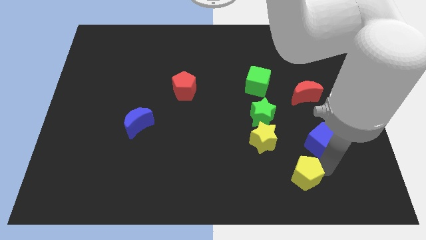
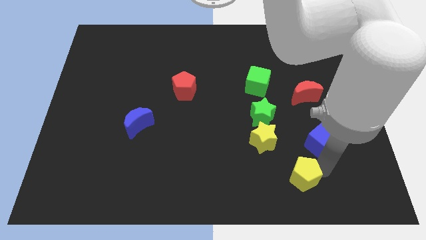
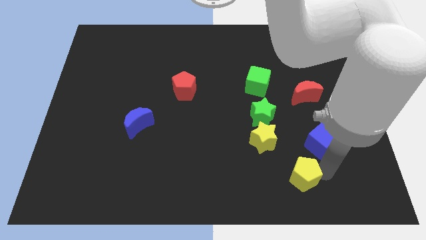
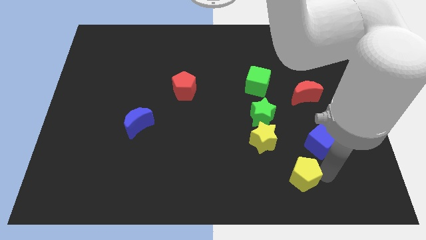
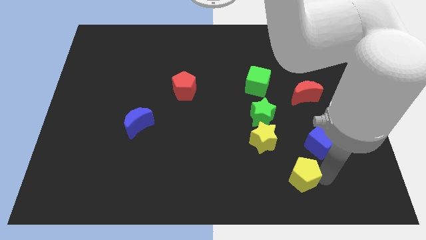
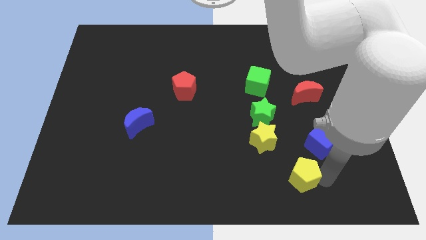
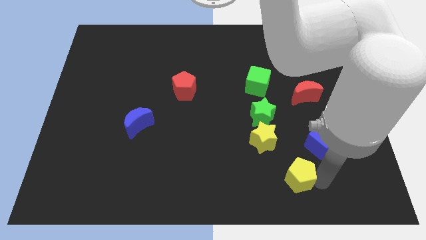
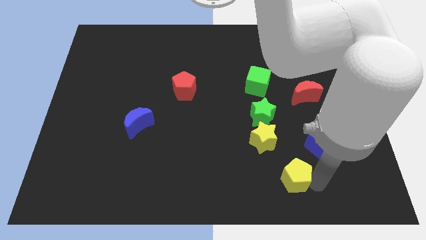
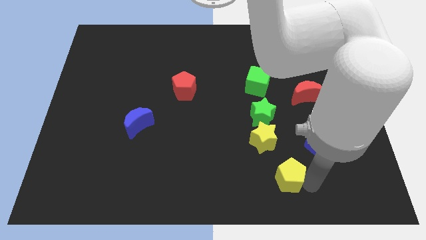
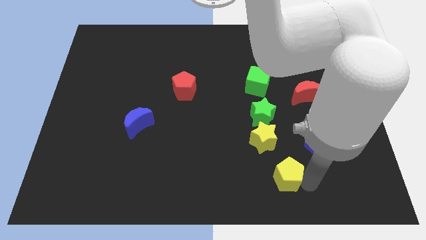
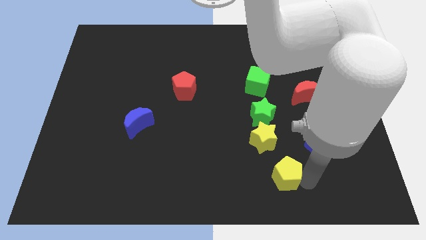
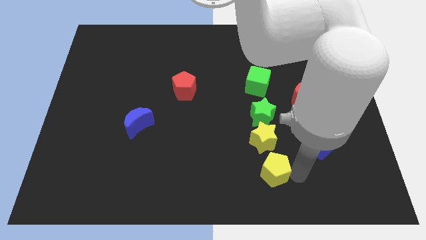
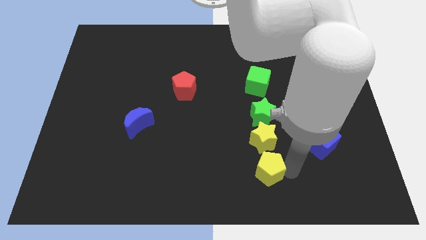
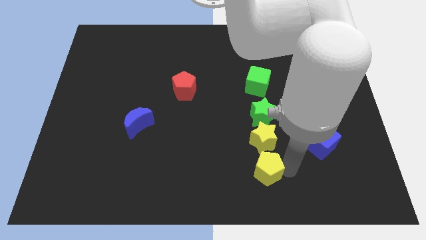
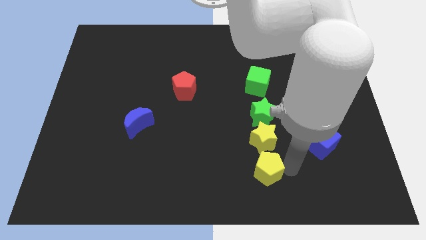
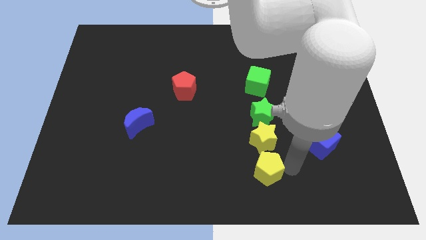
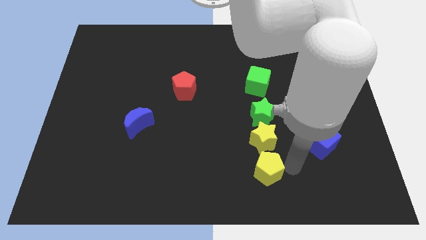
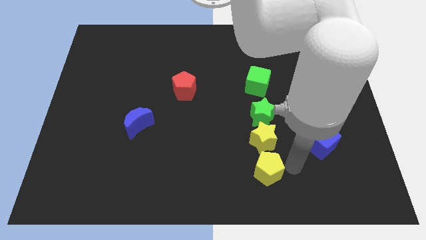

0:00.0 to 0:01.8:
place the yellow pentagon at the bottom of yellow star

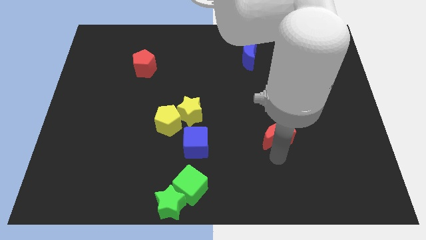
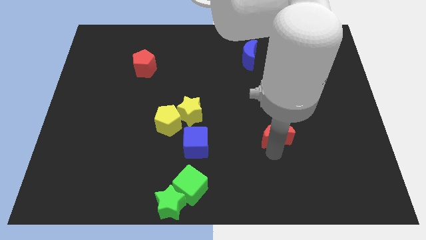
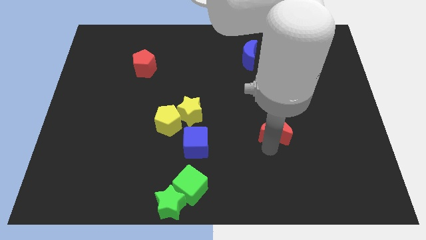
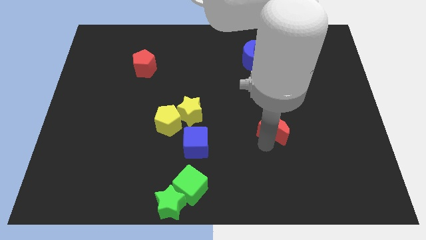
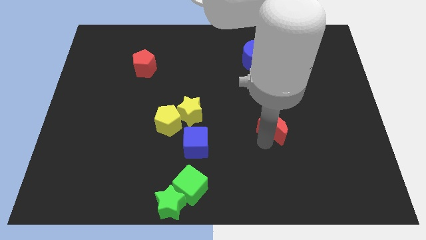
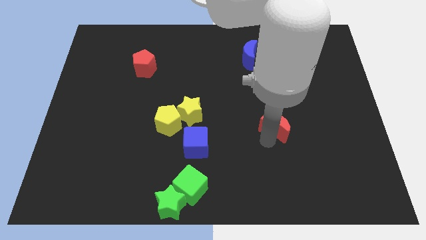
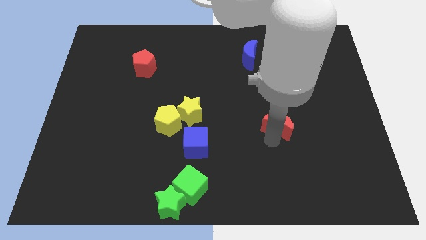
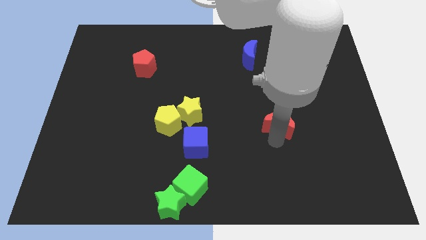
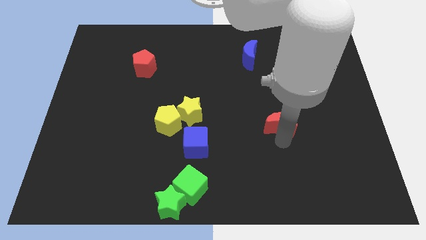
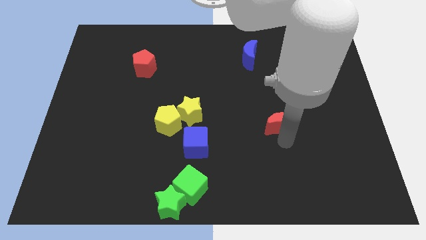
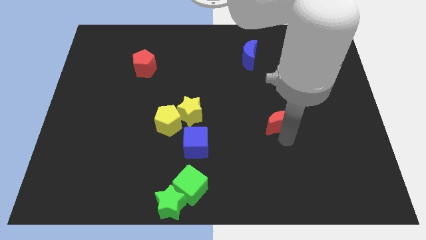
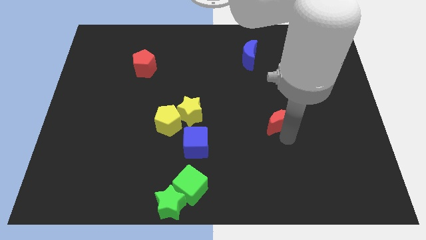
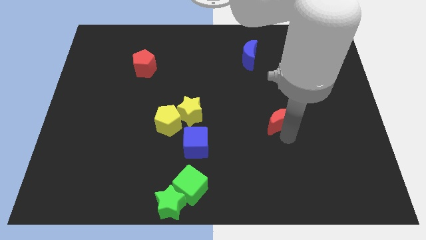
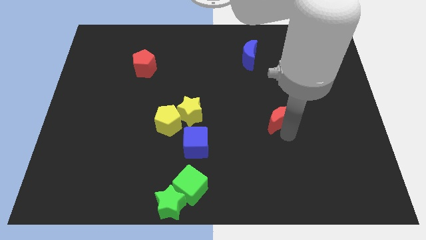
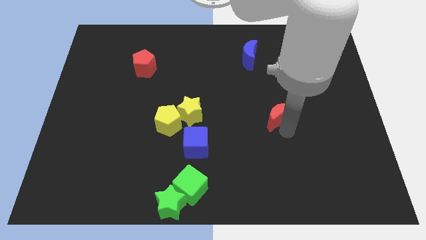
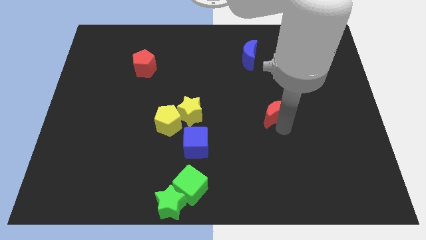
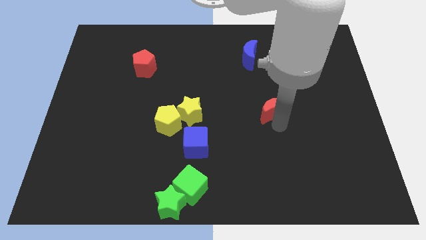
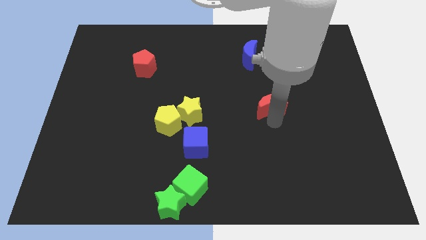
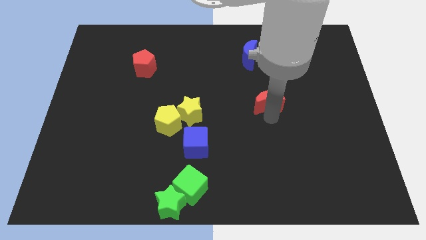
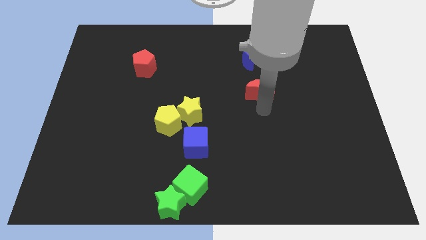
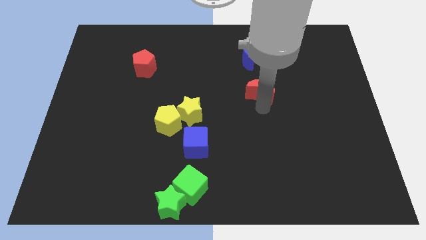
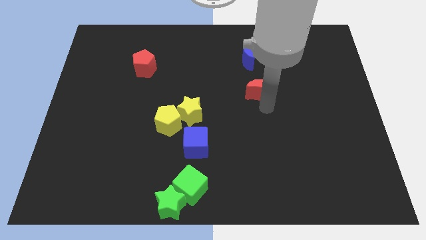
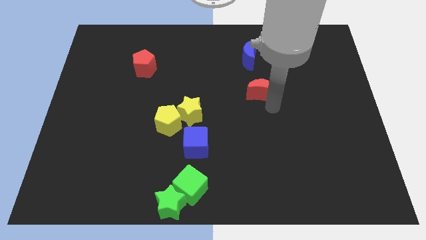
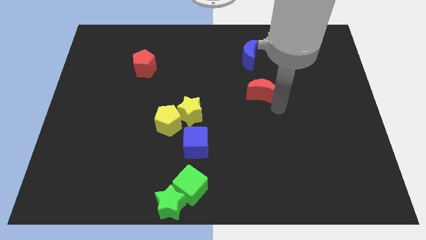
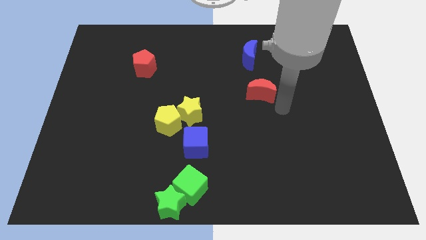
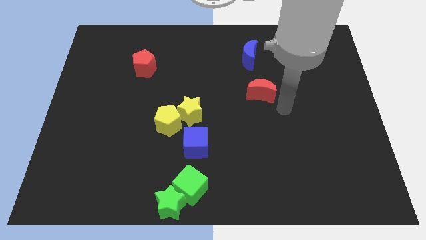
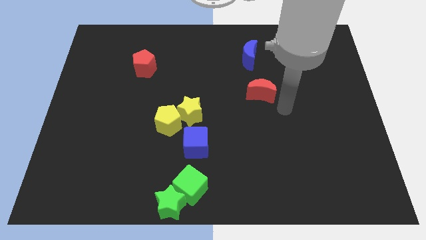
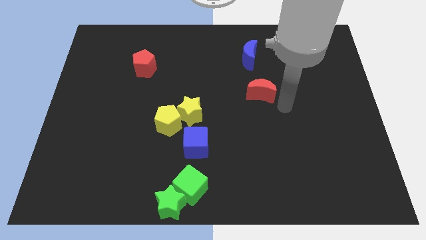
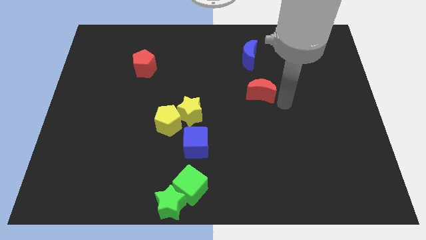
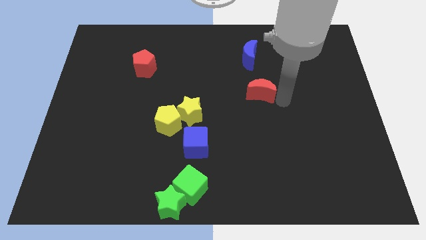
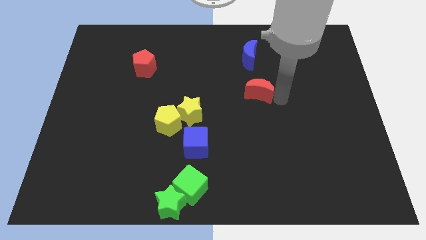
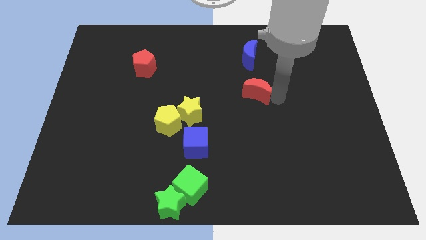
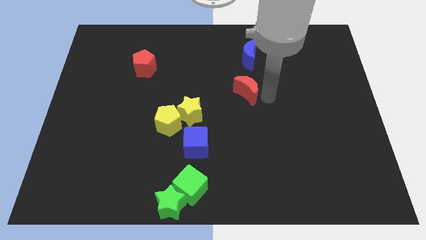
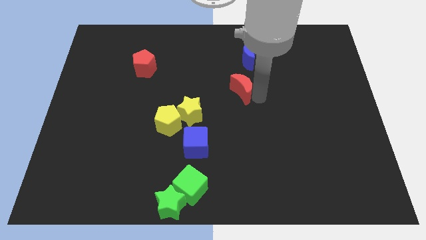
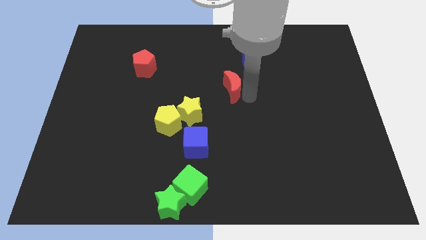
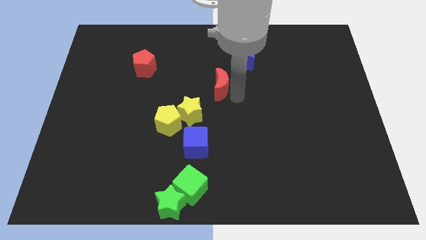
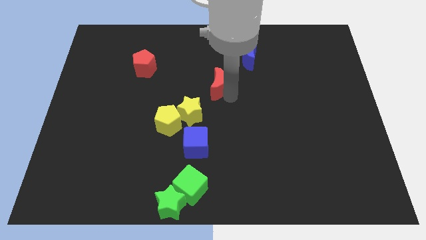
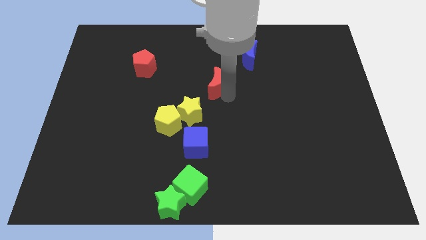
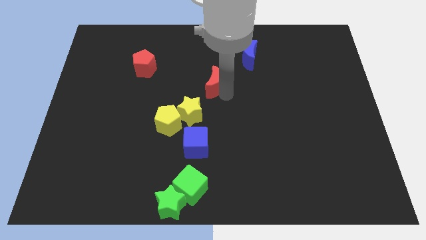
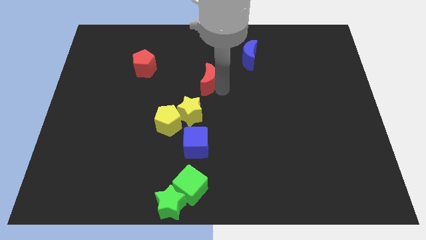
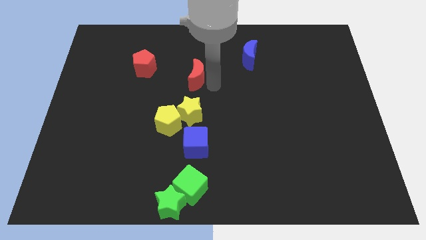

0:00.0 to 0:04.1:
move the red crescent above the top side of the yellow star

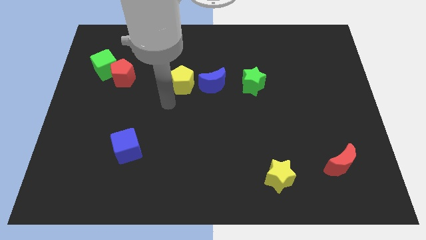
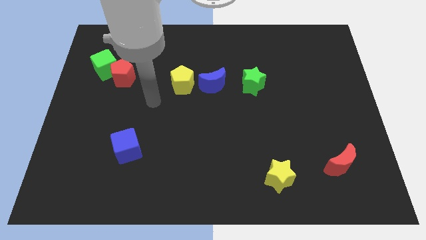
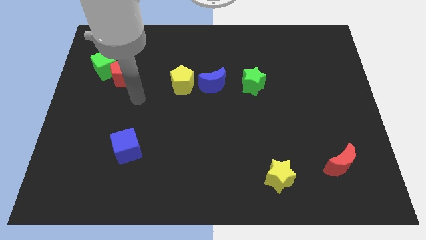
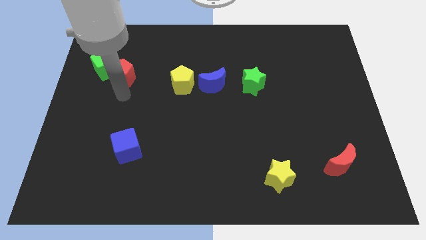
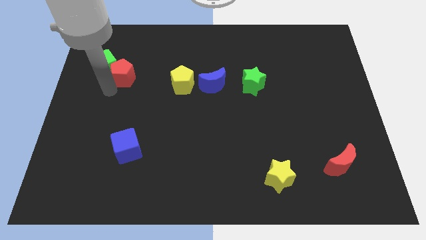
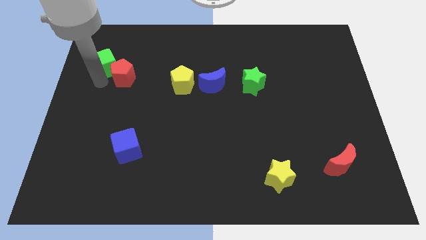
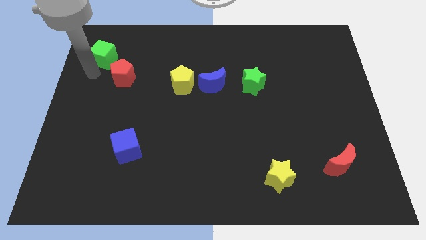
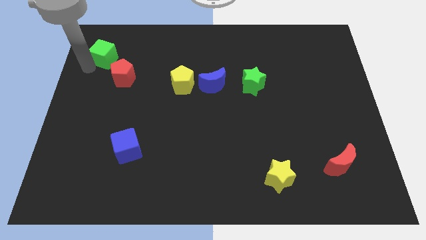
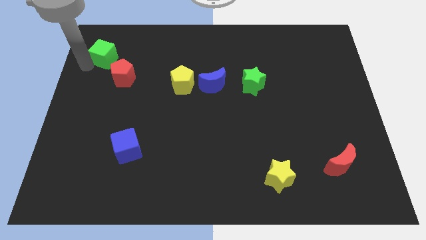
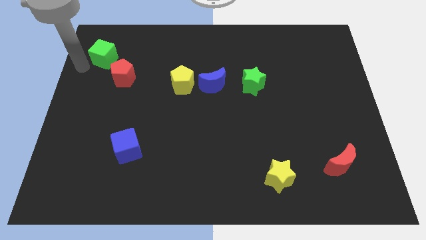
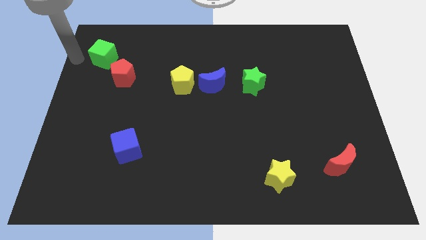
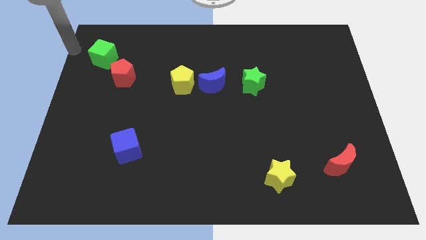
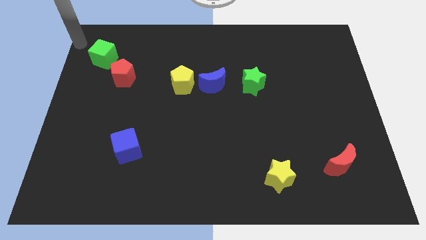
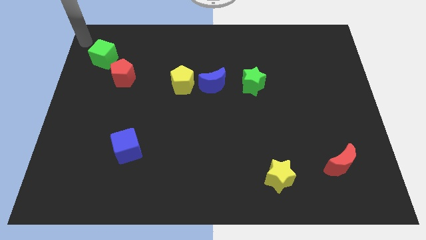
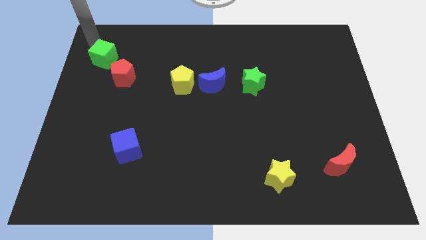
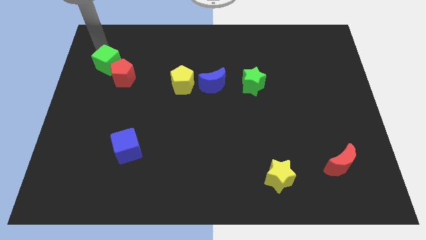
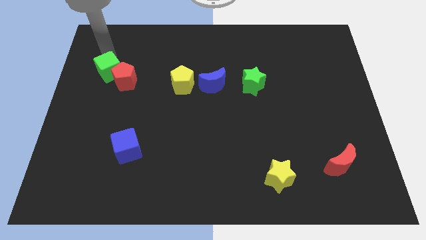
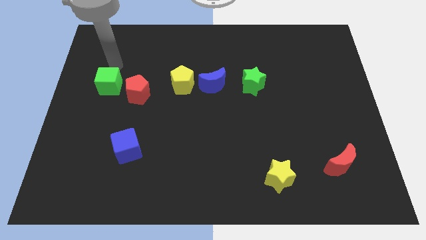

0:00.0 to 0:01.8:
move the green cube down slightly

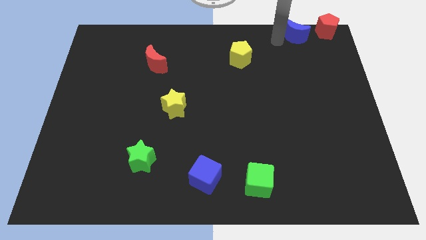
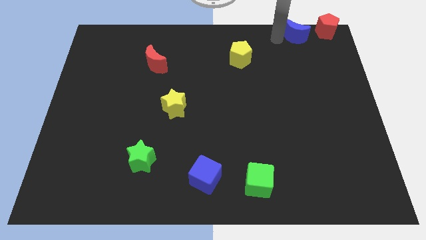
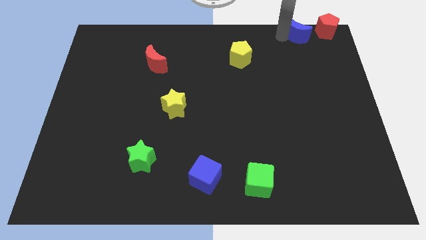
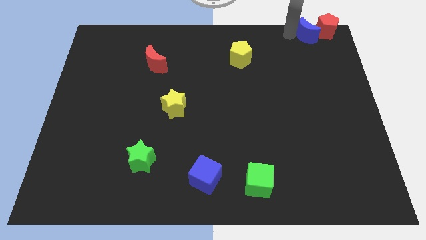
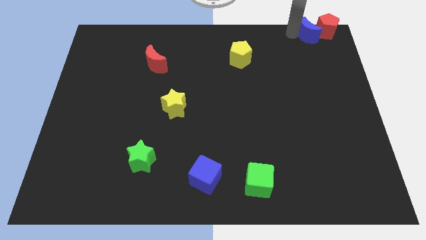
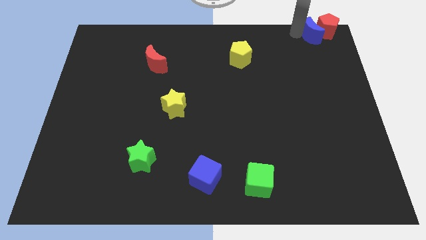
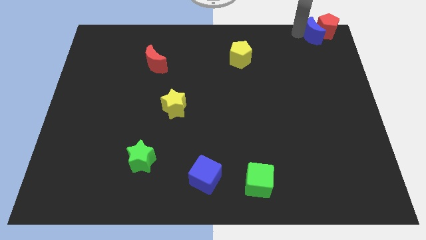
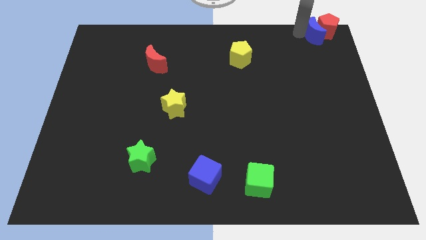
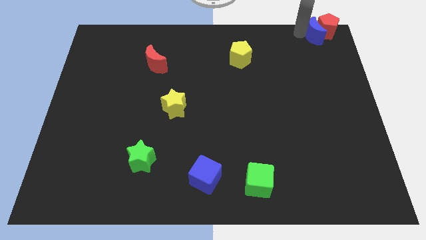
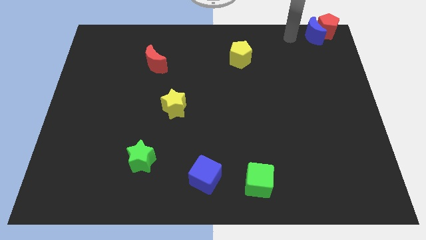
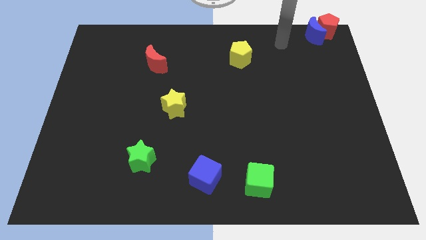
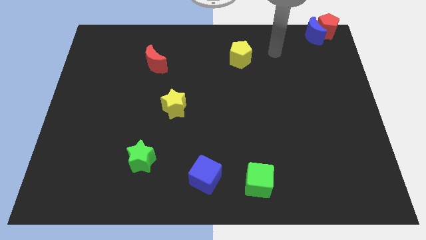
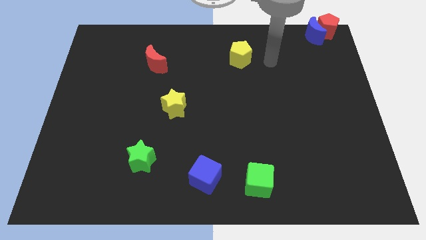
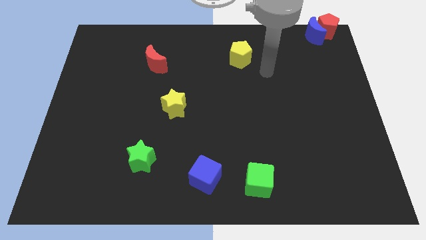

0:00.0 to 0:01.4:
move blue moon into red pentagon
